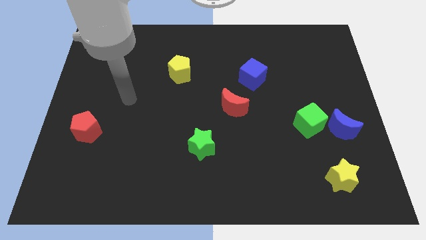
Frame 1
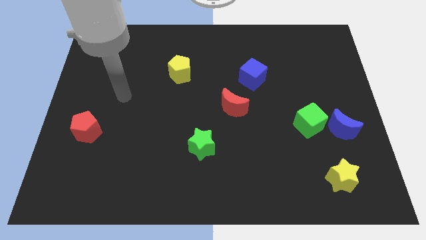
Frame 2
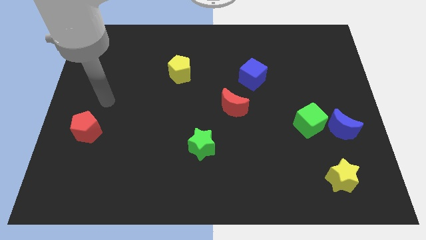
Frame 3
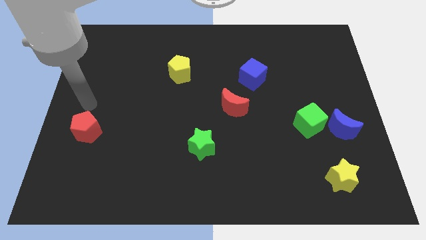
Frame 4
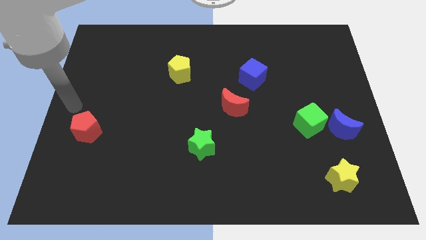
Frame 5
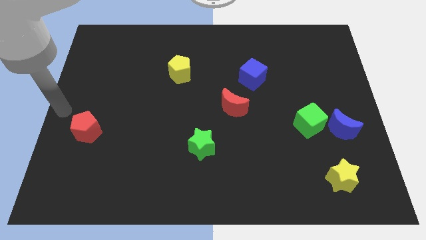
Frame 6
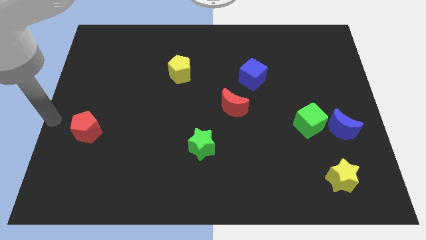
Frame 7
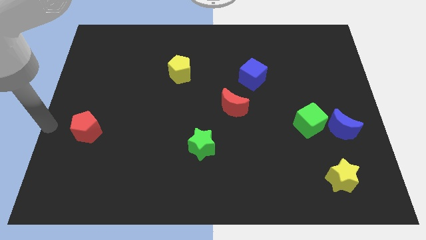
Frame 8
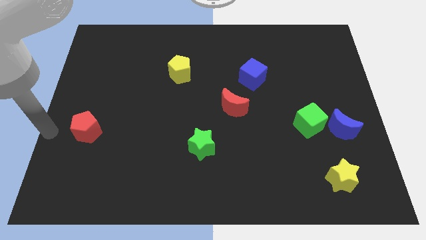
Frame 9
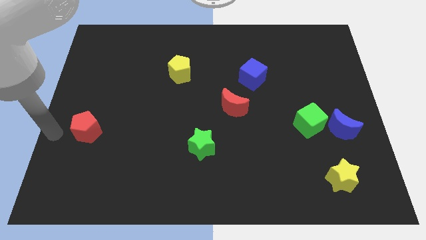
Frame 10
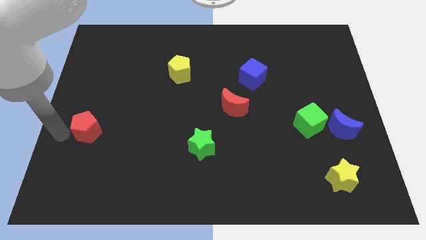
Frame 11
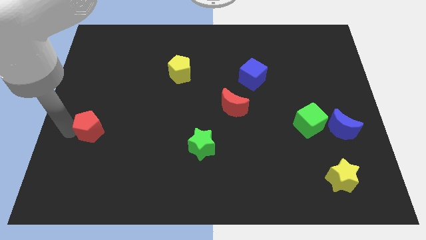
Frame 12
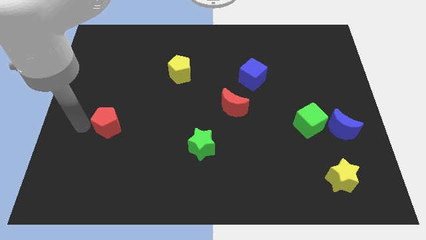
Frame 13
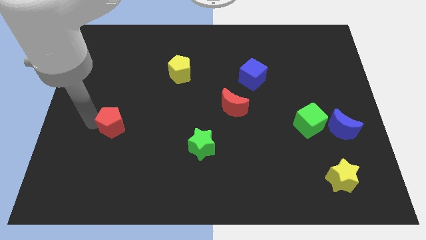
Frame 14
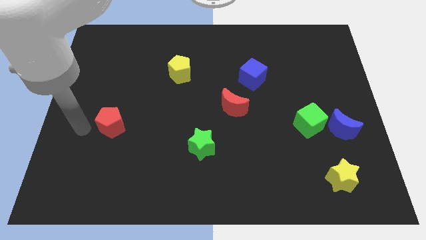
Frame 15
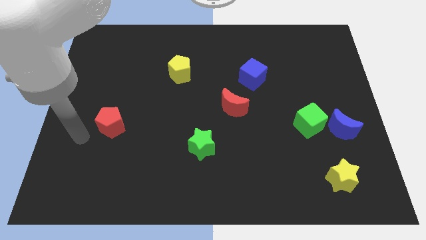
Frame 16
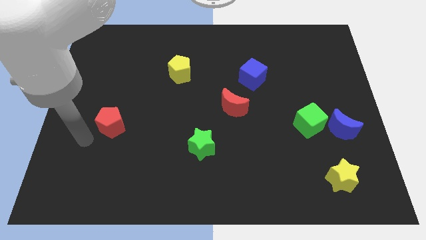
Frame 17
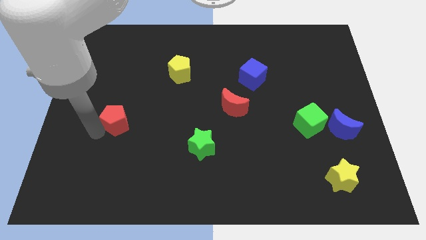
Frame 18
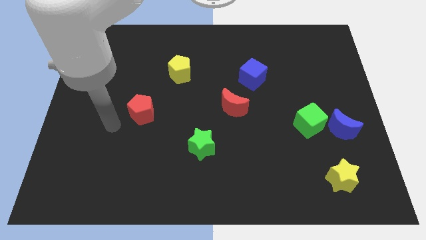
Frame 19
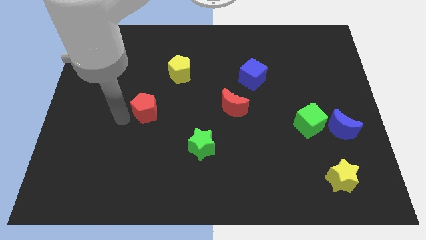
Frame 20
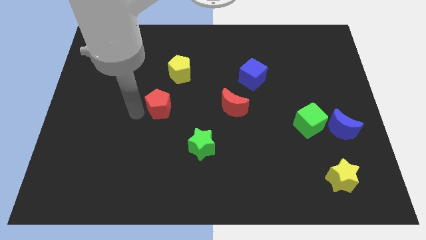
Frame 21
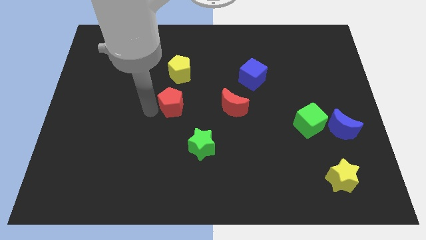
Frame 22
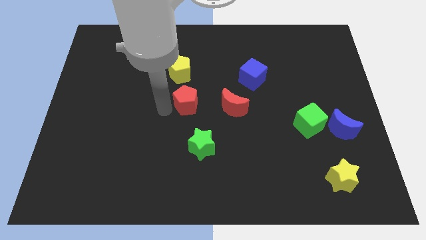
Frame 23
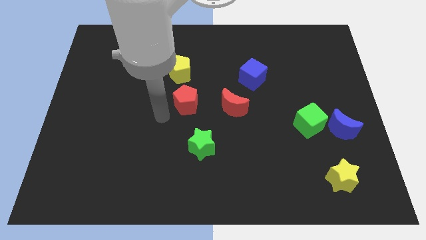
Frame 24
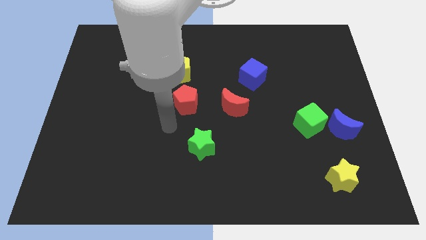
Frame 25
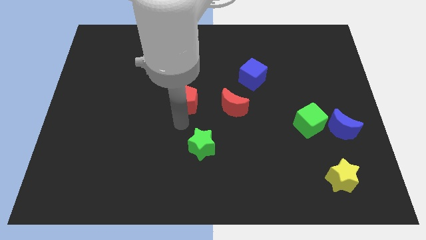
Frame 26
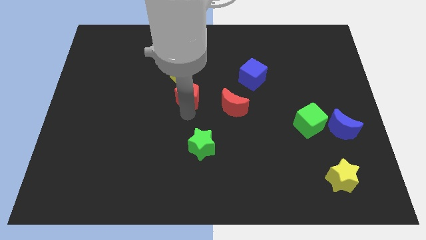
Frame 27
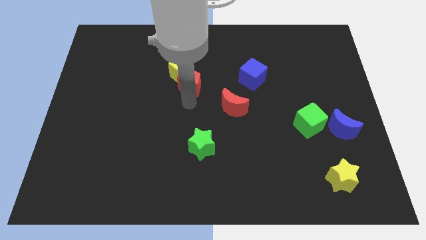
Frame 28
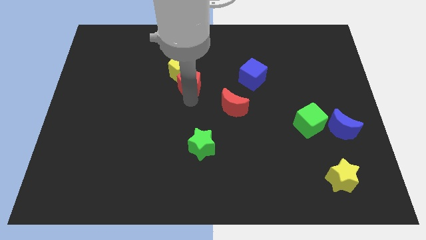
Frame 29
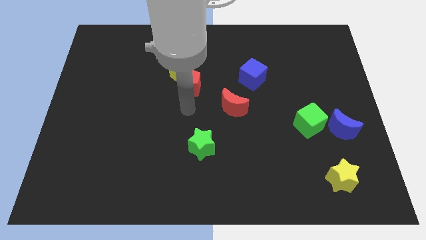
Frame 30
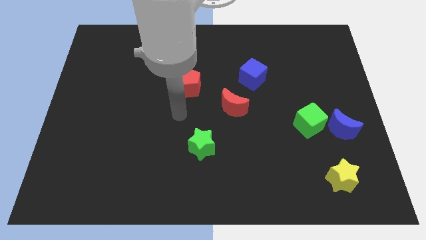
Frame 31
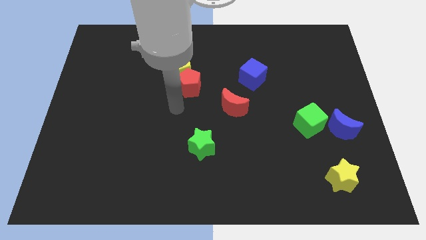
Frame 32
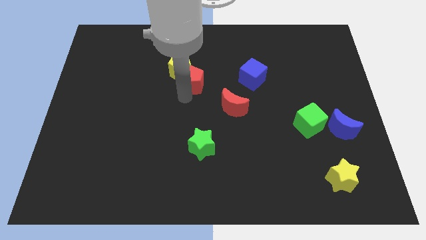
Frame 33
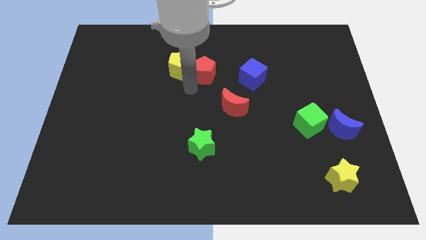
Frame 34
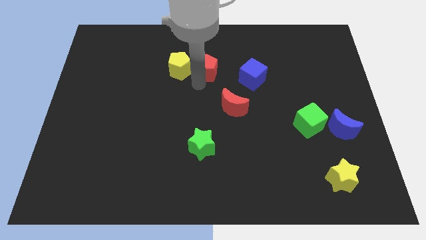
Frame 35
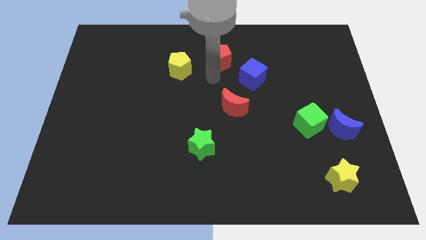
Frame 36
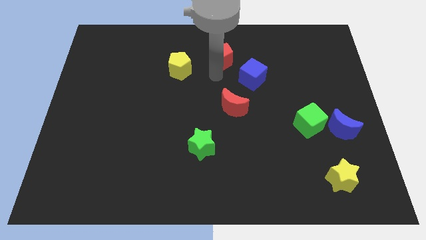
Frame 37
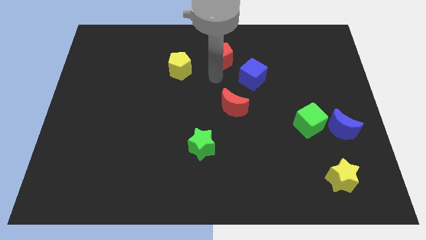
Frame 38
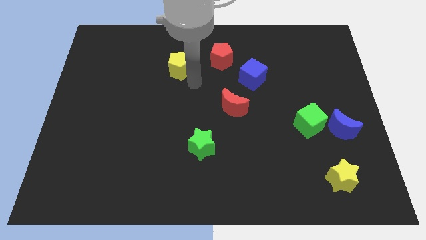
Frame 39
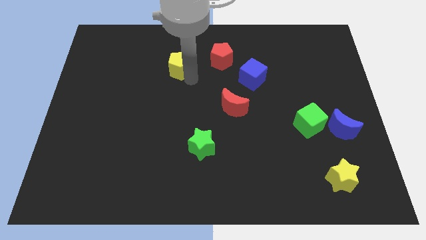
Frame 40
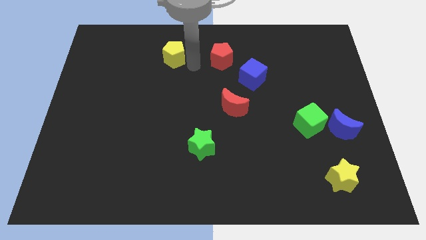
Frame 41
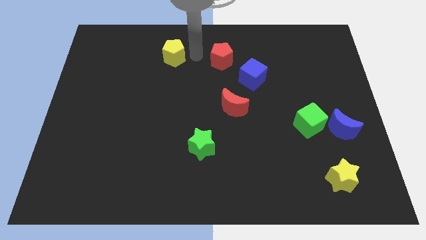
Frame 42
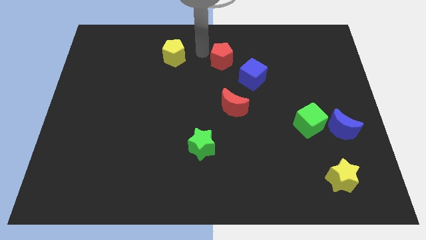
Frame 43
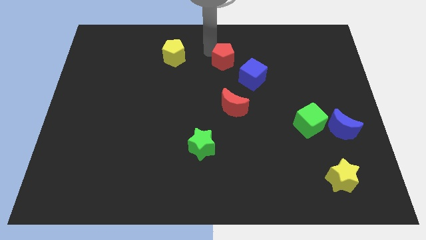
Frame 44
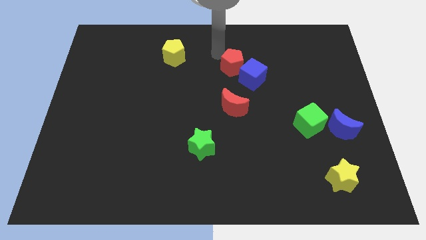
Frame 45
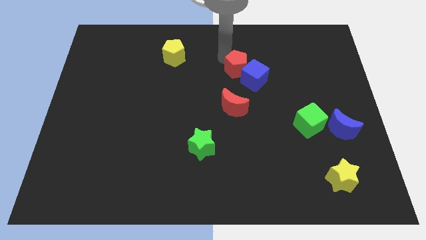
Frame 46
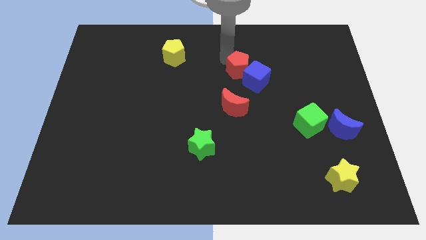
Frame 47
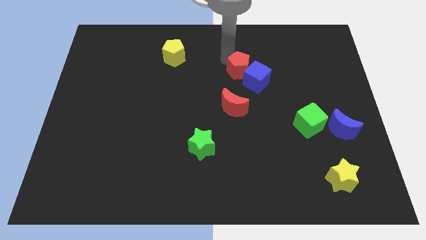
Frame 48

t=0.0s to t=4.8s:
move the red pentagon towards the blue cube

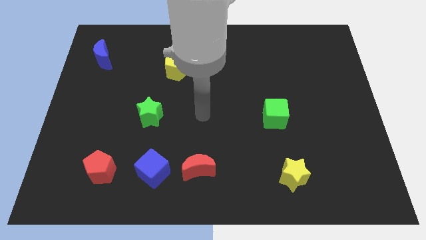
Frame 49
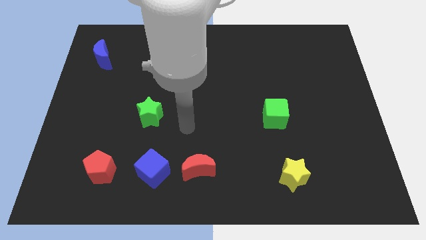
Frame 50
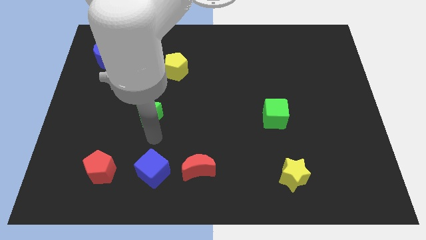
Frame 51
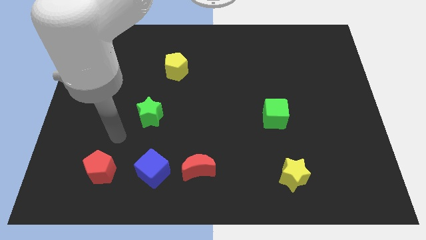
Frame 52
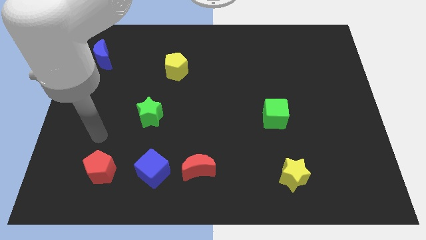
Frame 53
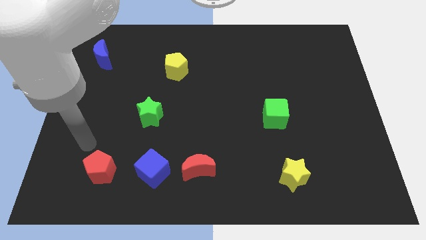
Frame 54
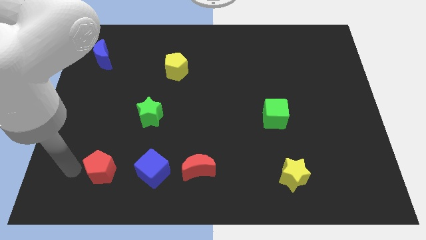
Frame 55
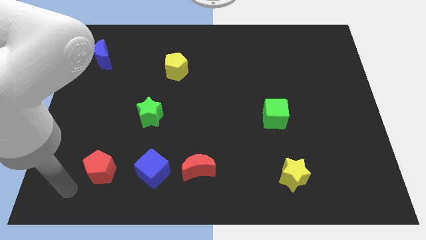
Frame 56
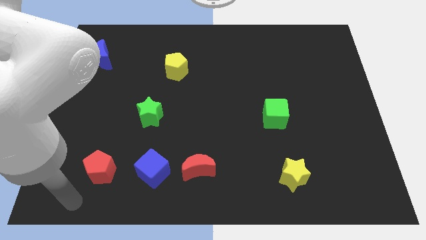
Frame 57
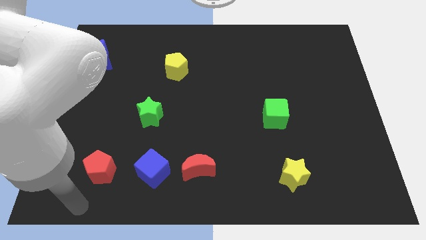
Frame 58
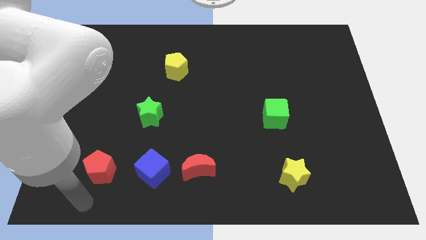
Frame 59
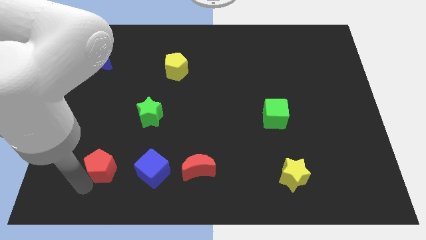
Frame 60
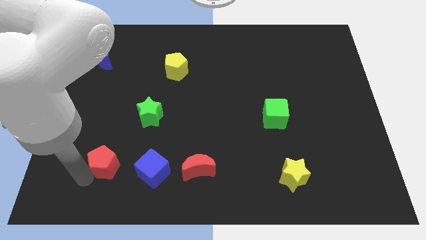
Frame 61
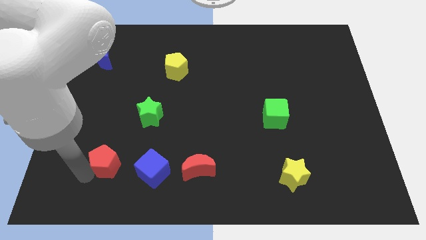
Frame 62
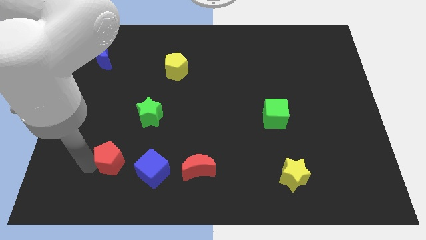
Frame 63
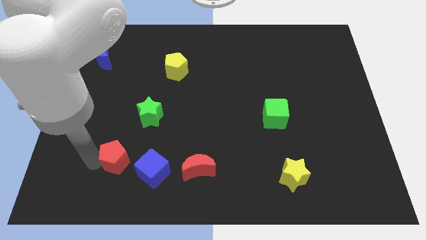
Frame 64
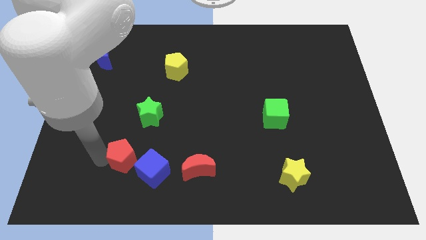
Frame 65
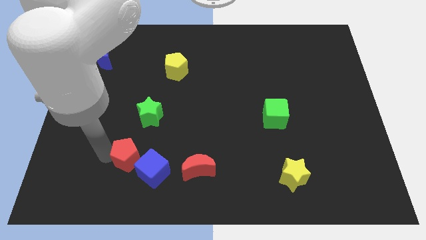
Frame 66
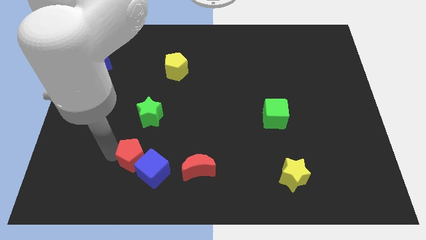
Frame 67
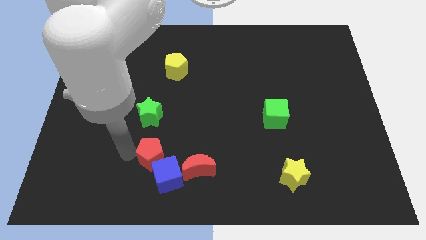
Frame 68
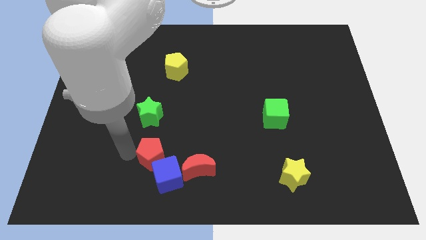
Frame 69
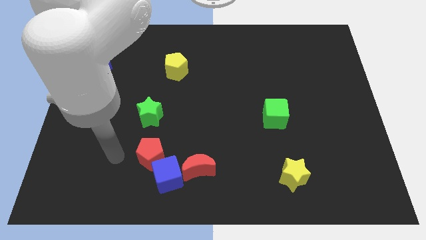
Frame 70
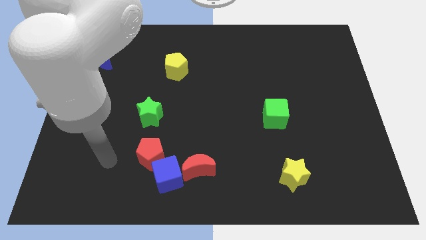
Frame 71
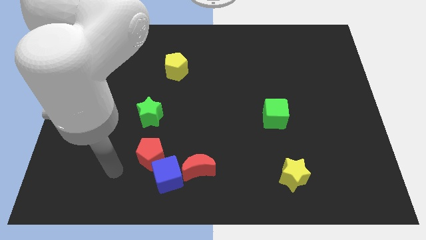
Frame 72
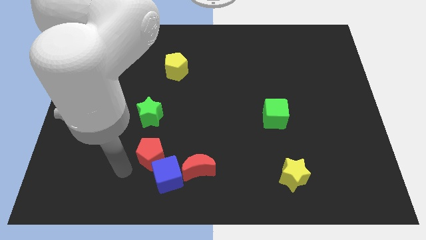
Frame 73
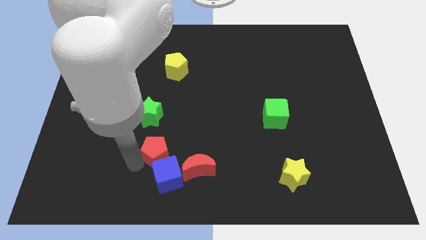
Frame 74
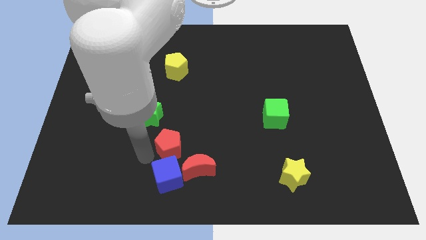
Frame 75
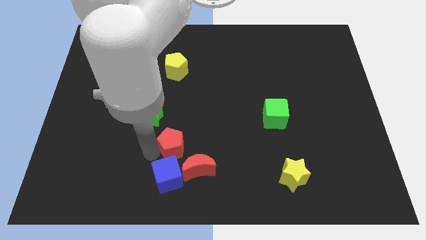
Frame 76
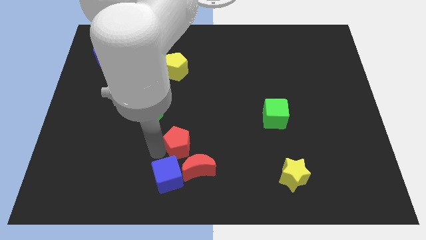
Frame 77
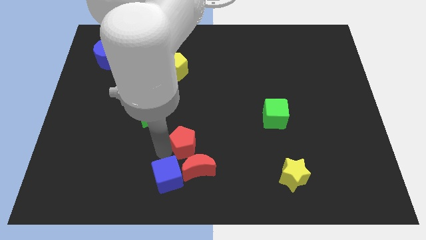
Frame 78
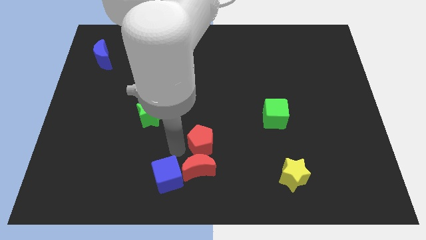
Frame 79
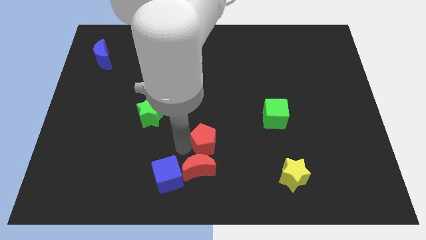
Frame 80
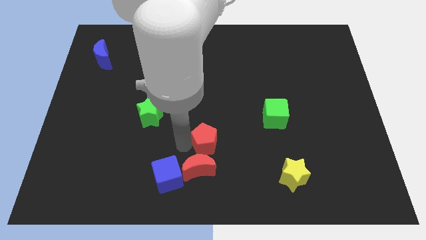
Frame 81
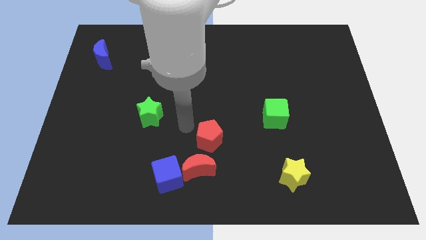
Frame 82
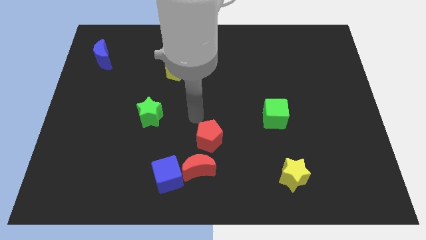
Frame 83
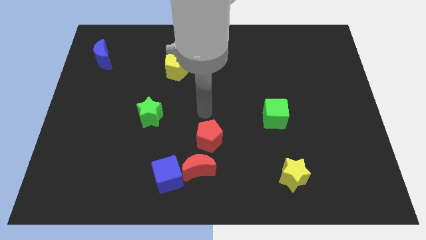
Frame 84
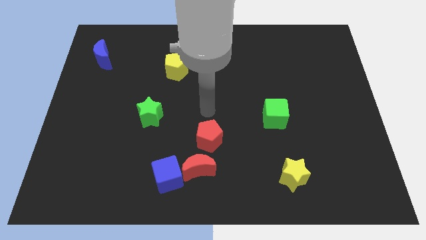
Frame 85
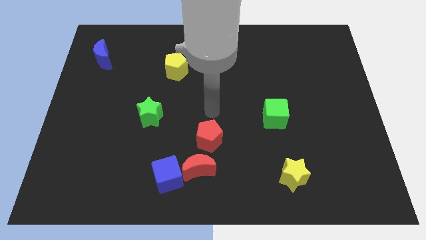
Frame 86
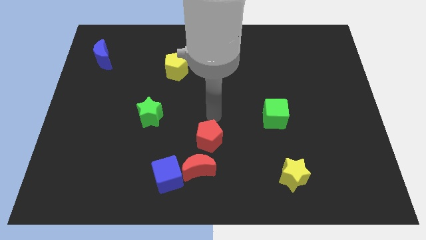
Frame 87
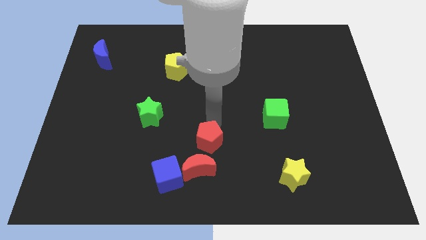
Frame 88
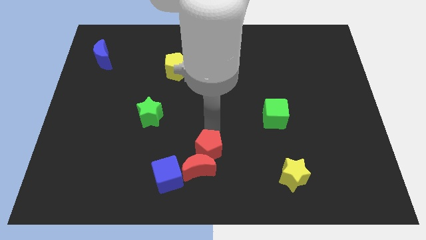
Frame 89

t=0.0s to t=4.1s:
move the red pentagon next to the red moon
